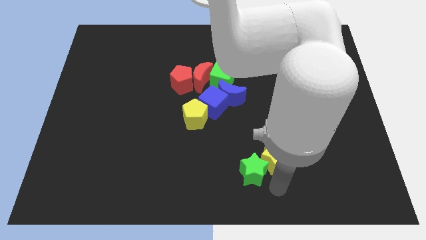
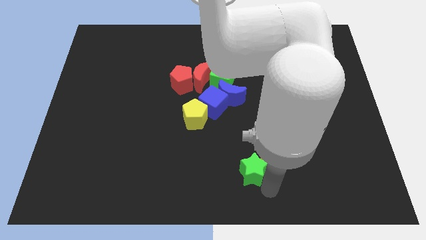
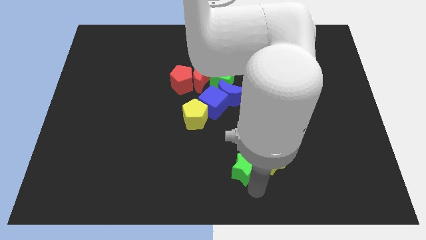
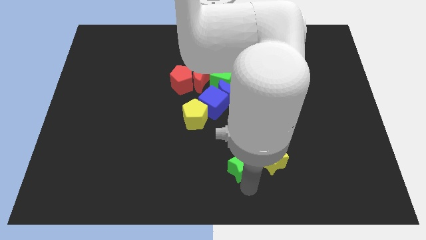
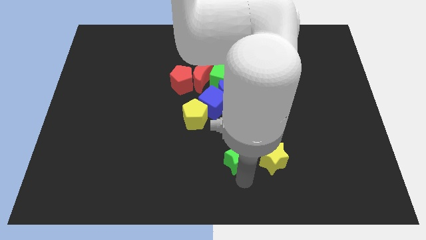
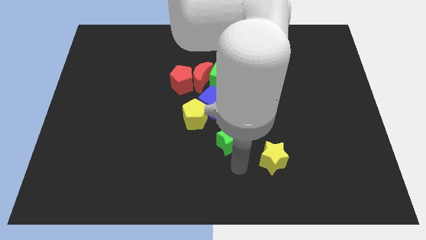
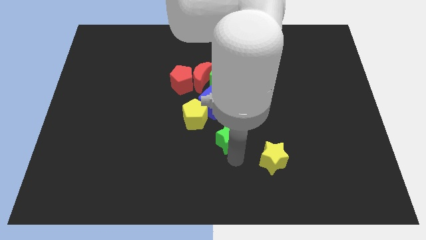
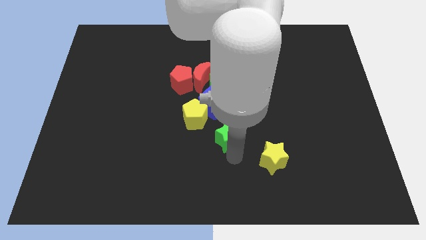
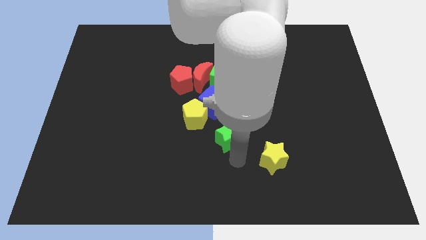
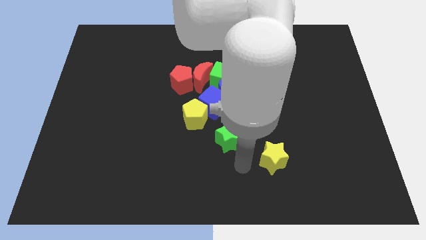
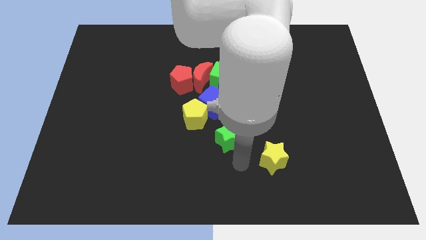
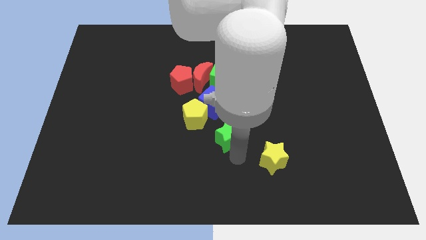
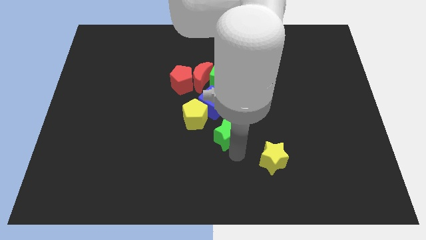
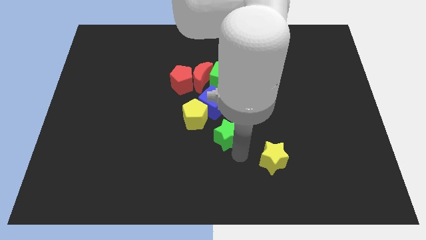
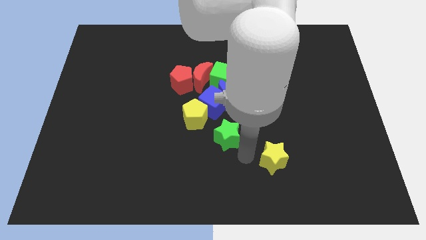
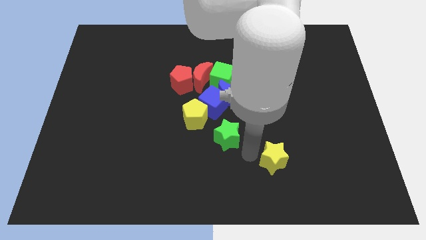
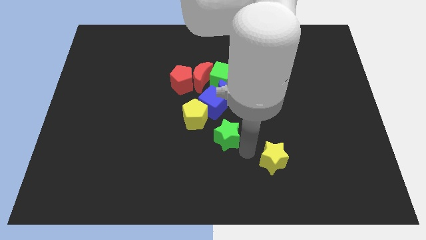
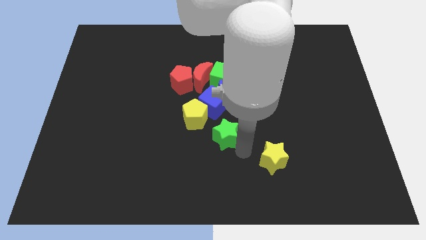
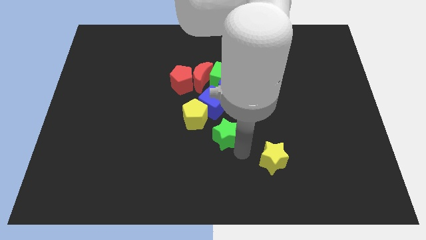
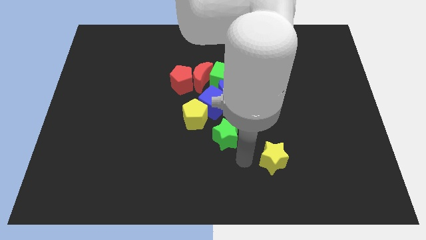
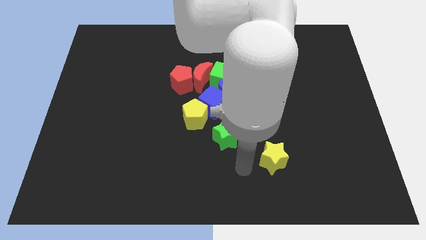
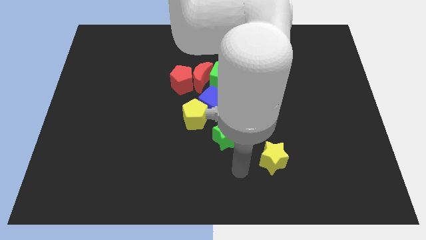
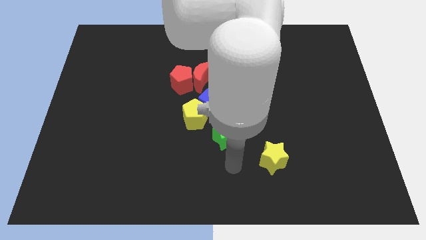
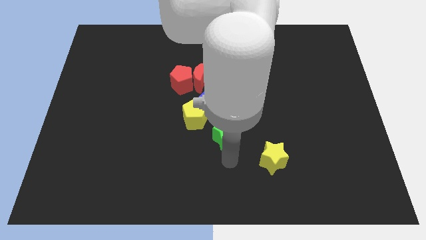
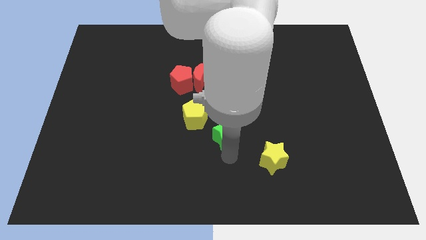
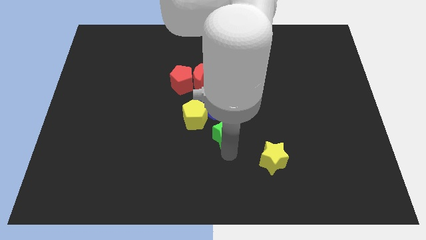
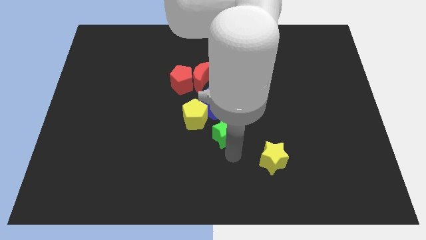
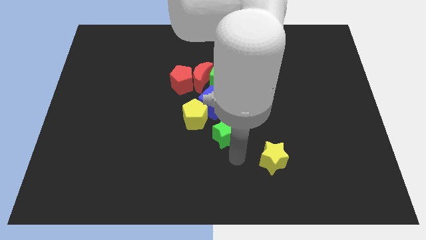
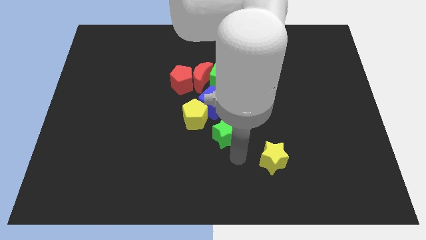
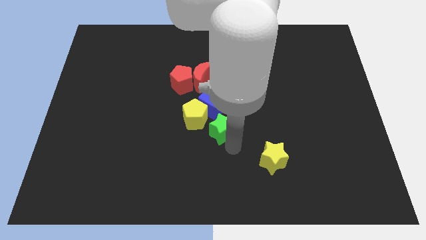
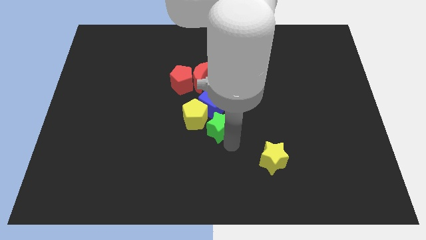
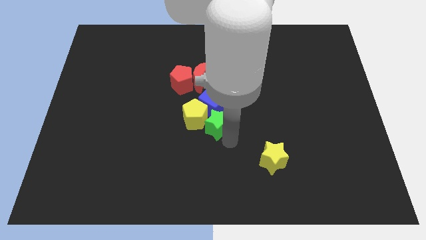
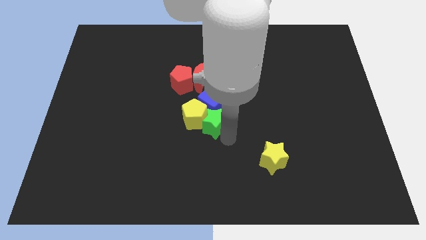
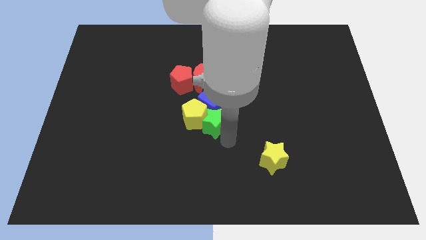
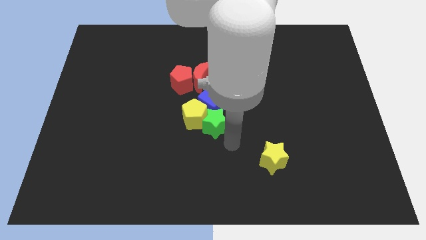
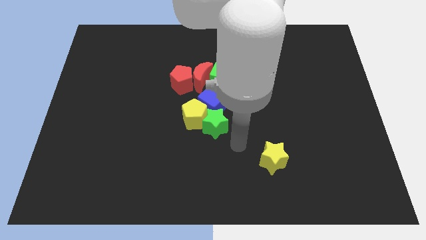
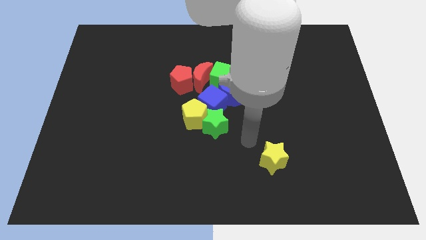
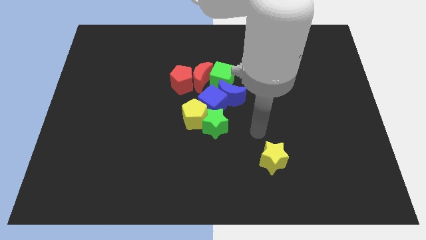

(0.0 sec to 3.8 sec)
push green star in to yellow pentagon

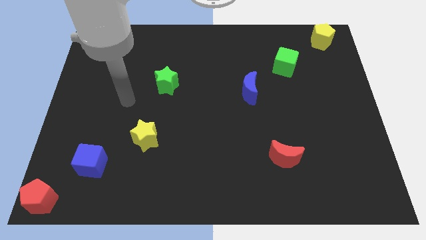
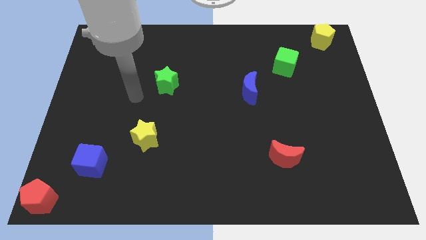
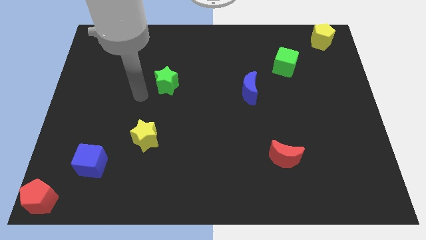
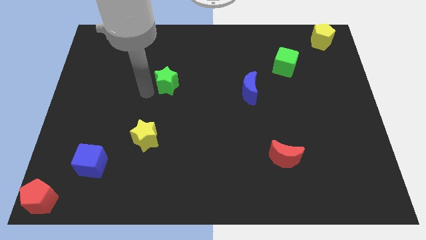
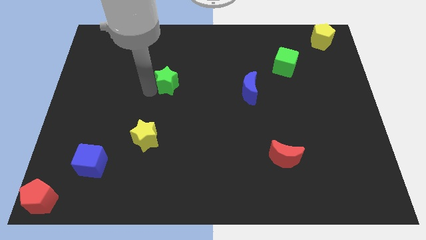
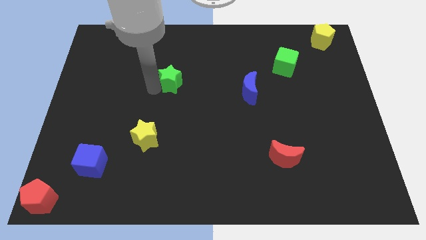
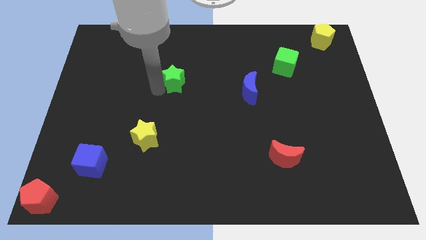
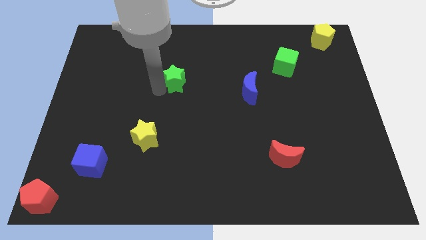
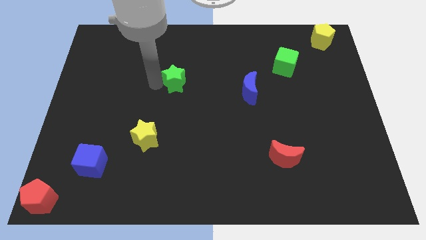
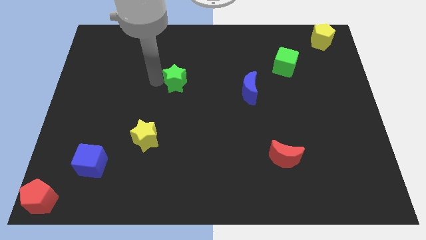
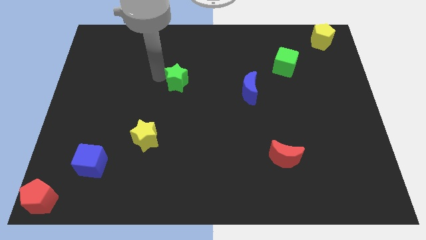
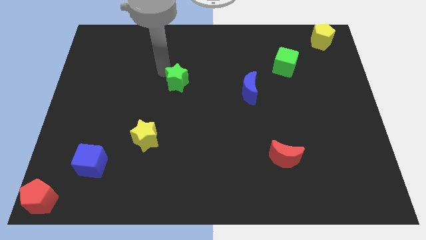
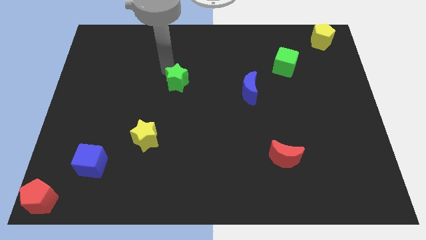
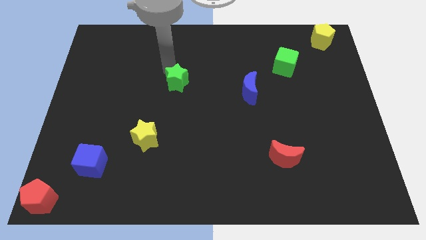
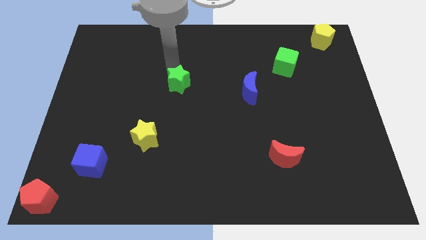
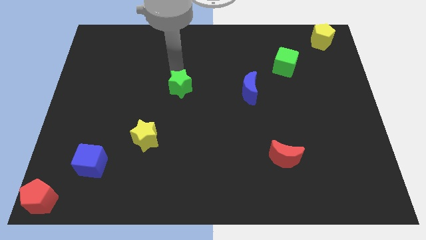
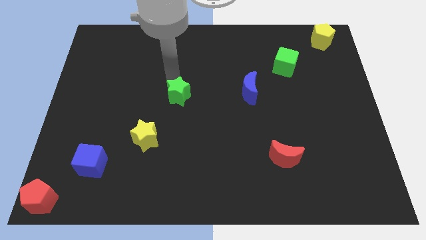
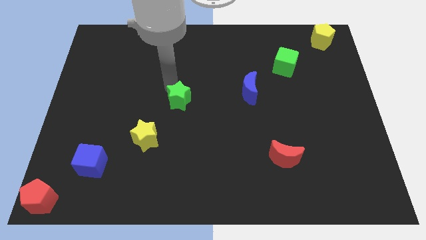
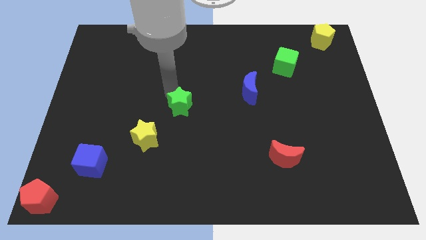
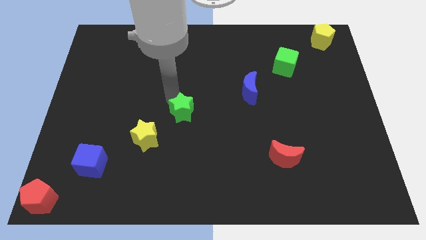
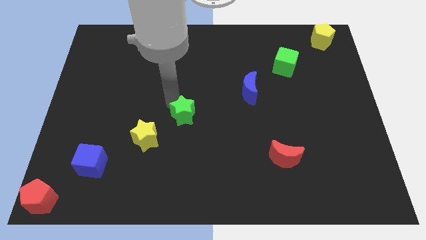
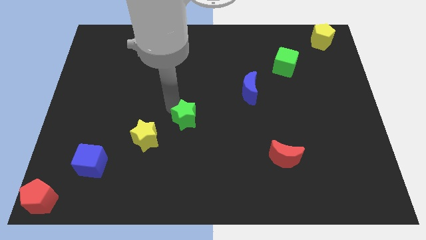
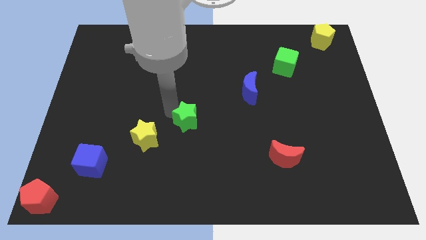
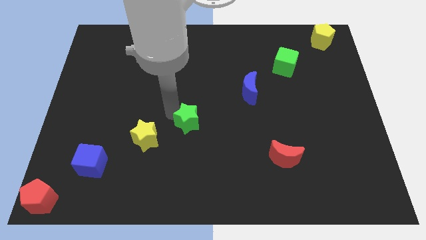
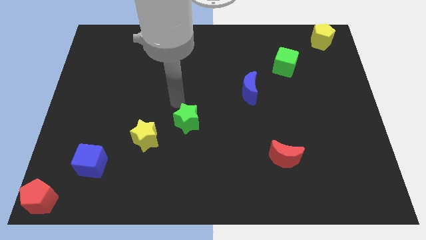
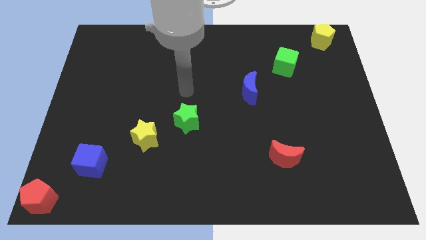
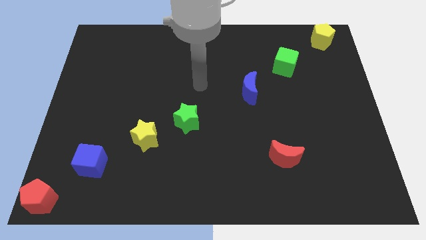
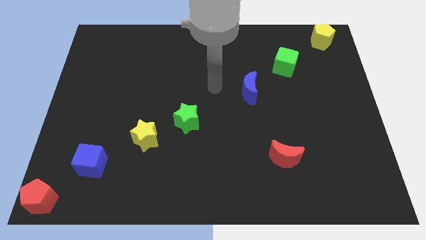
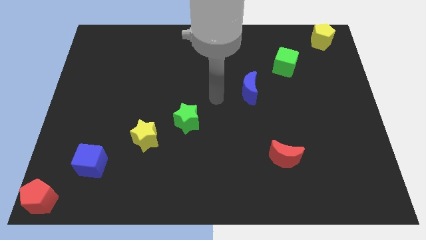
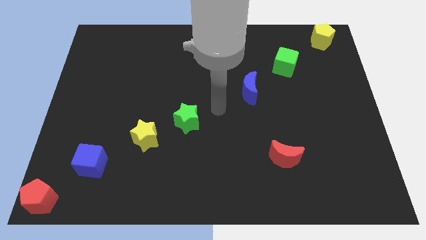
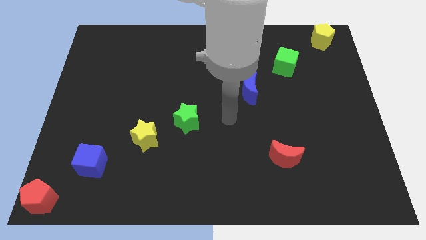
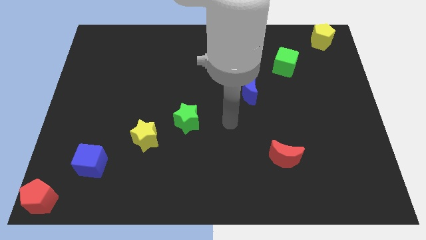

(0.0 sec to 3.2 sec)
push green star

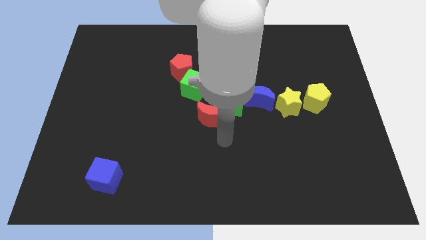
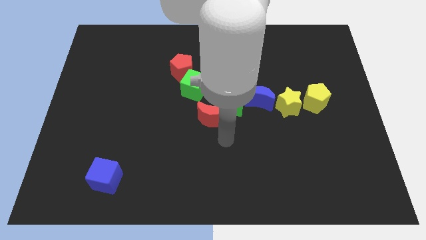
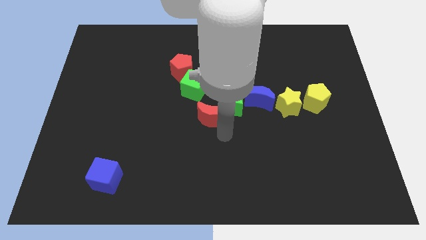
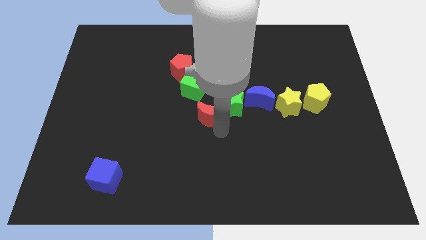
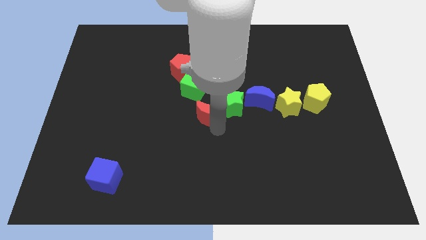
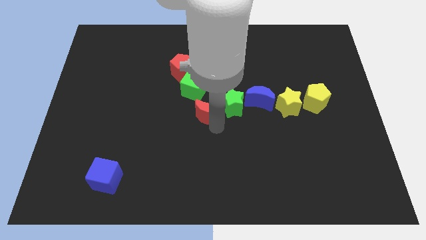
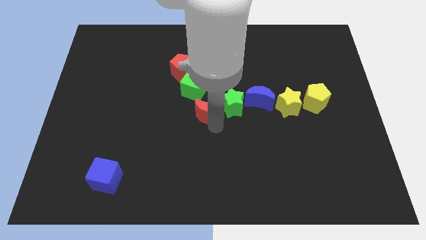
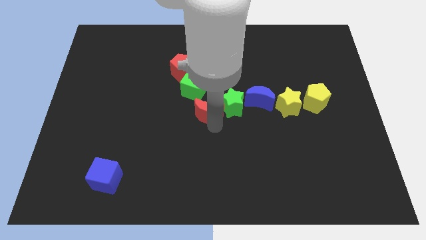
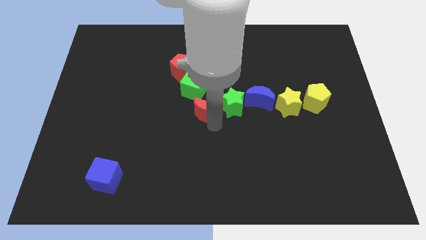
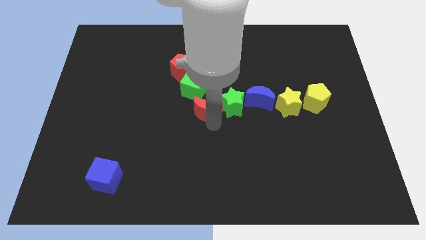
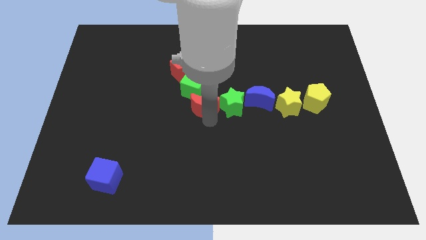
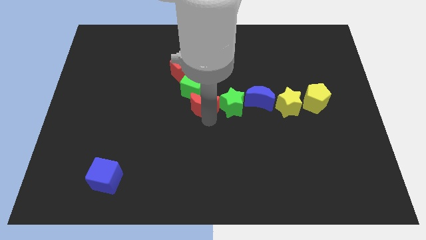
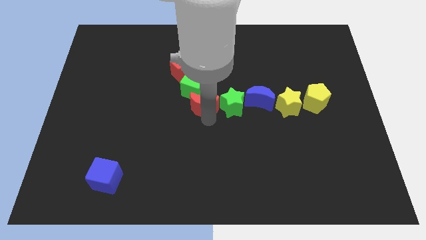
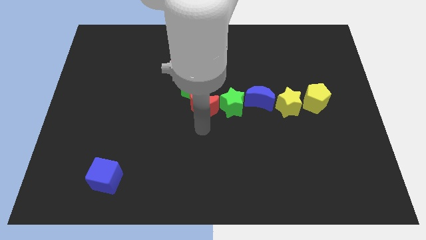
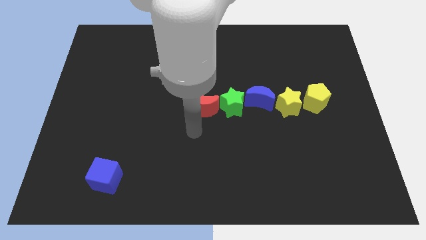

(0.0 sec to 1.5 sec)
slightly push the red moon towards the top

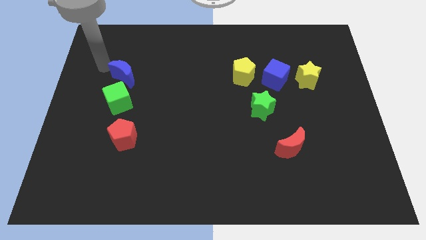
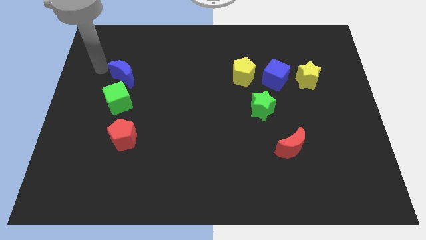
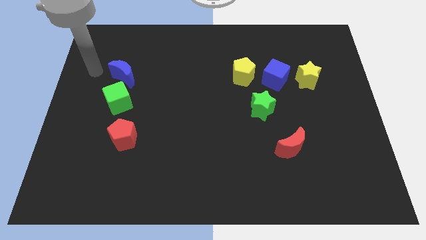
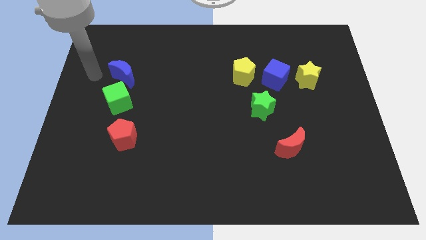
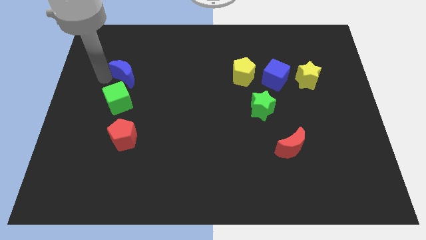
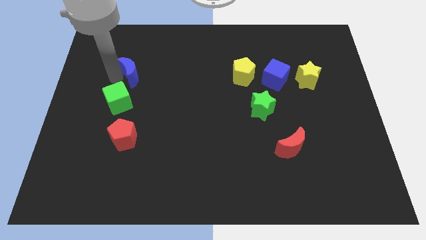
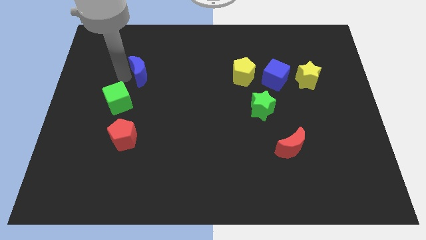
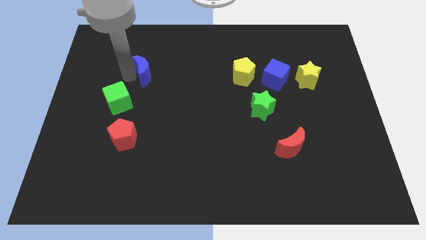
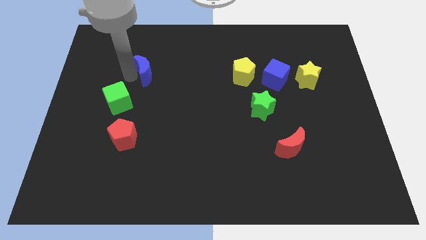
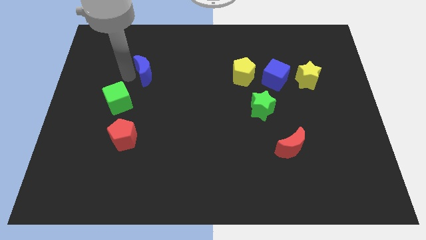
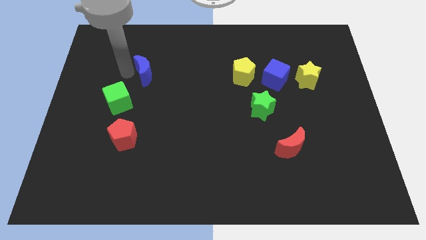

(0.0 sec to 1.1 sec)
move the blue moon slightly towards right
